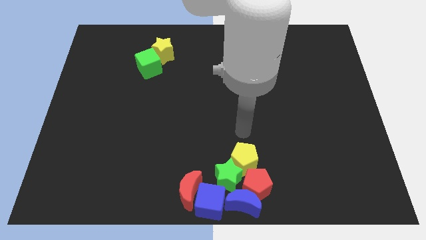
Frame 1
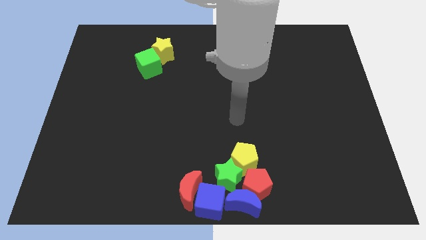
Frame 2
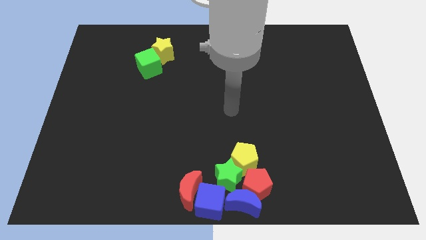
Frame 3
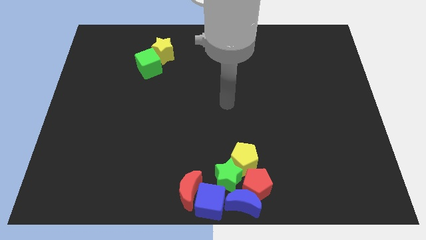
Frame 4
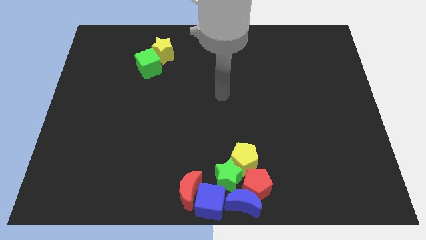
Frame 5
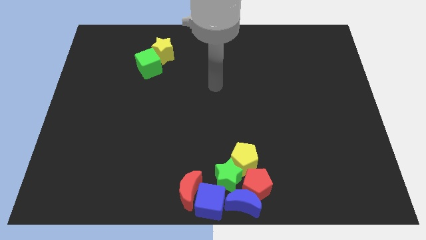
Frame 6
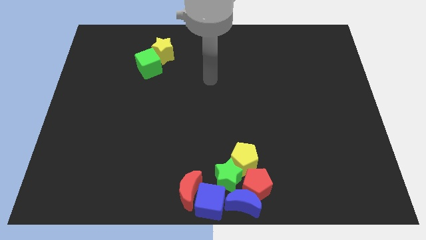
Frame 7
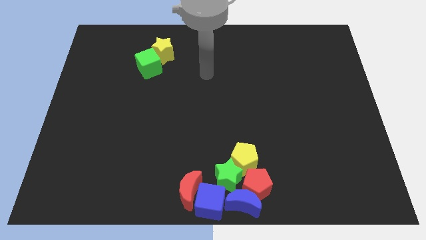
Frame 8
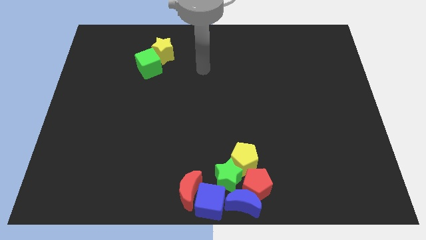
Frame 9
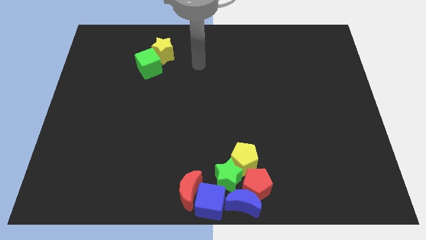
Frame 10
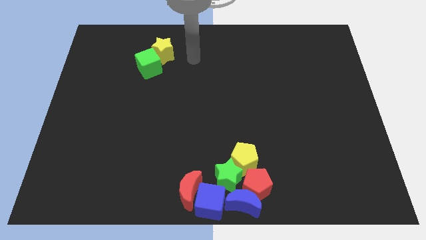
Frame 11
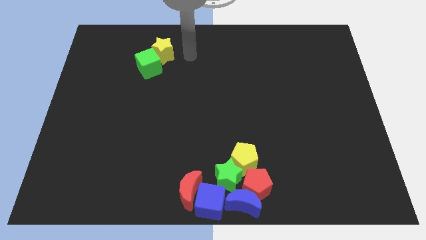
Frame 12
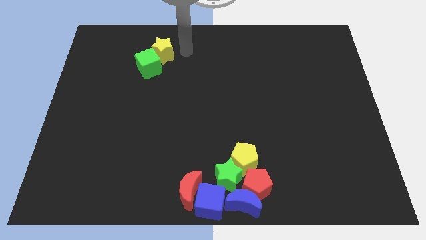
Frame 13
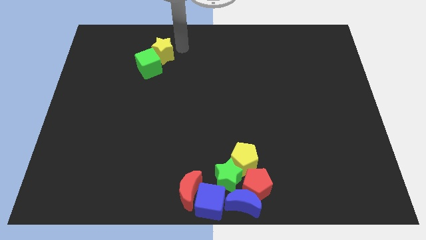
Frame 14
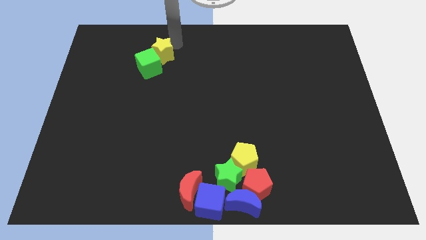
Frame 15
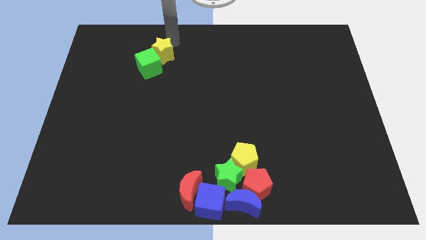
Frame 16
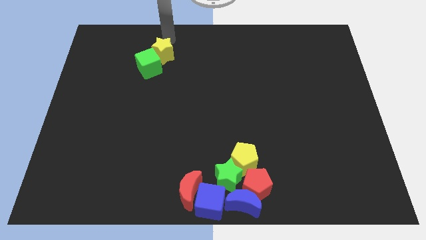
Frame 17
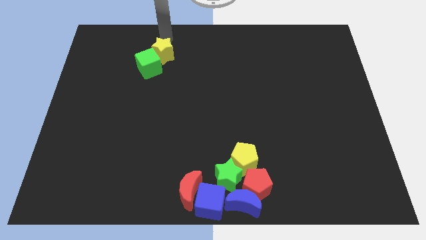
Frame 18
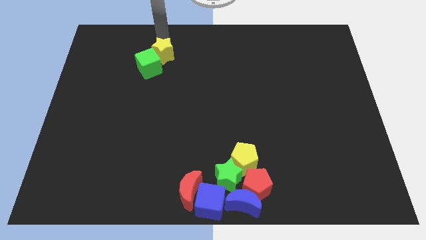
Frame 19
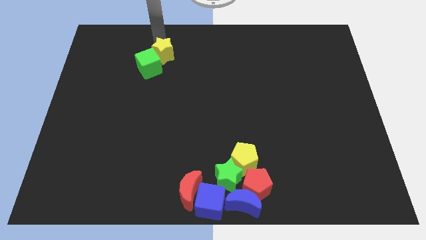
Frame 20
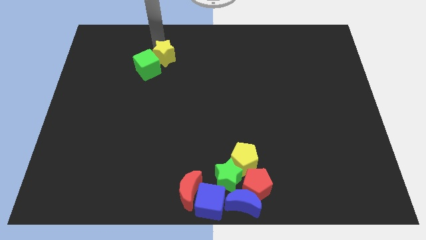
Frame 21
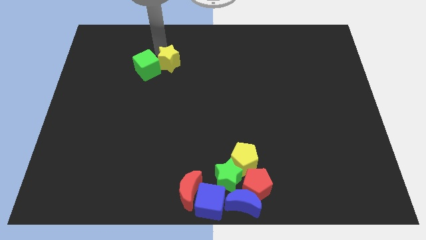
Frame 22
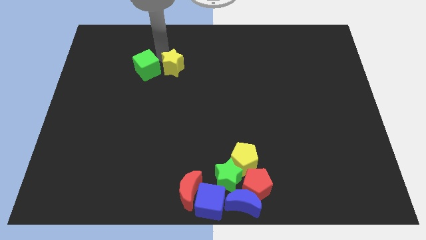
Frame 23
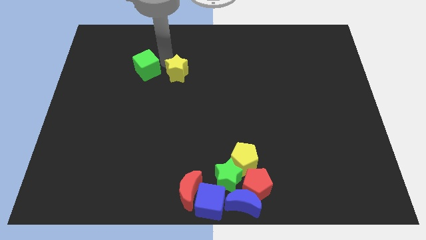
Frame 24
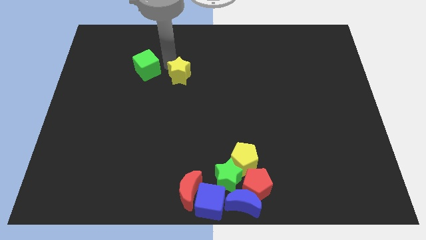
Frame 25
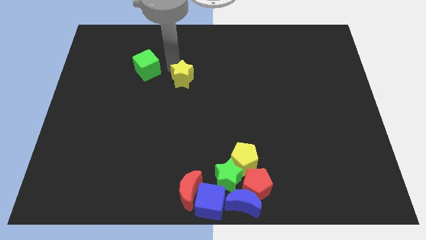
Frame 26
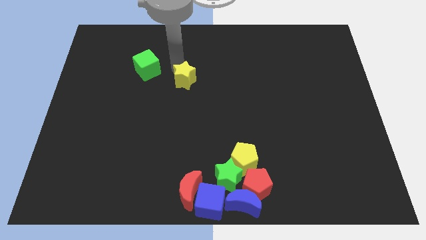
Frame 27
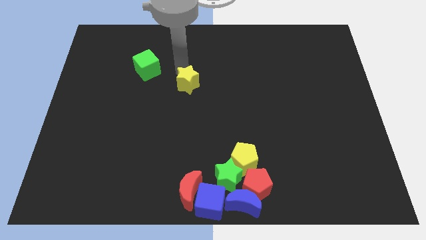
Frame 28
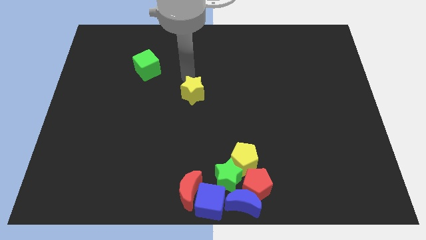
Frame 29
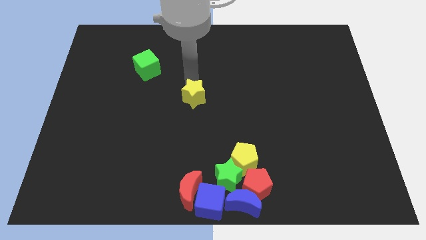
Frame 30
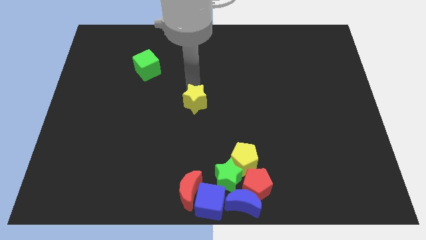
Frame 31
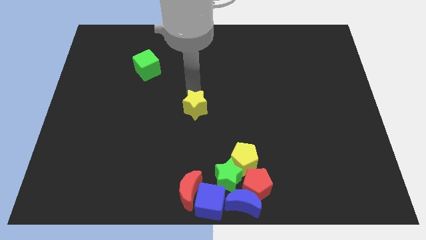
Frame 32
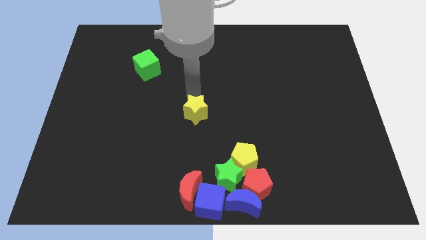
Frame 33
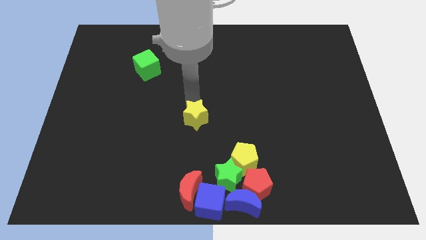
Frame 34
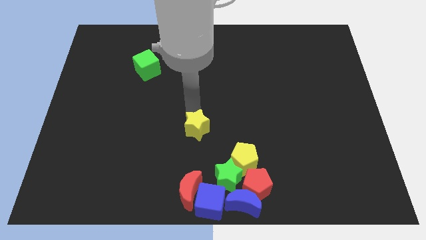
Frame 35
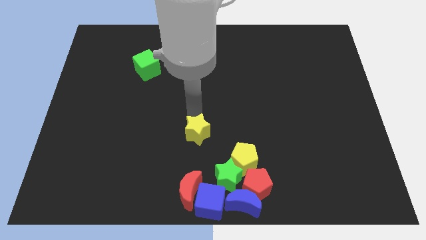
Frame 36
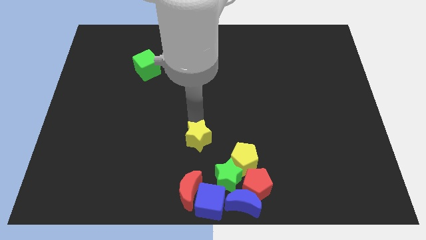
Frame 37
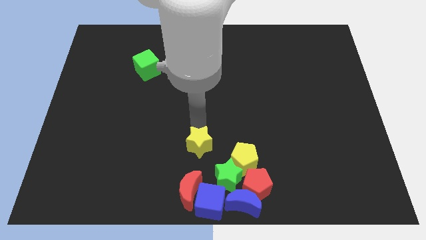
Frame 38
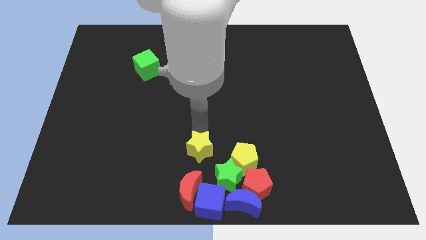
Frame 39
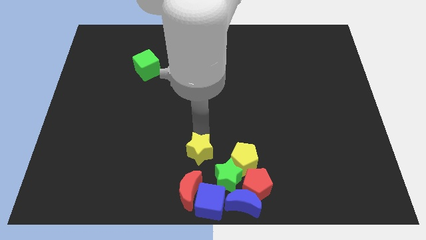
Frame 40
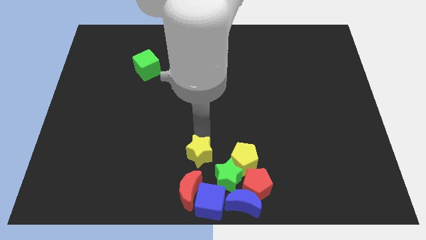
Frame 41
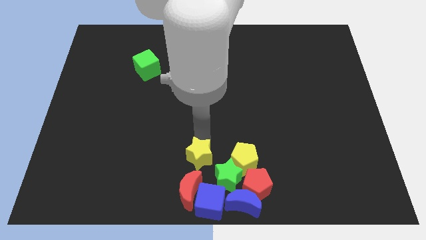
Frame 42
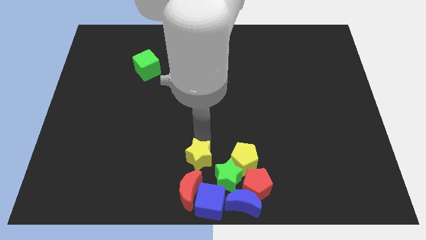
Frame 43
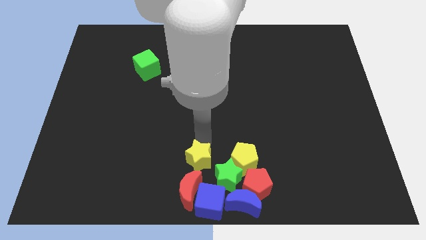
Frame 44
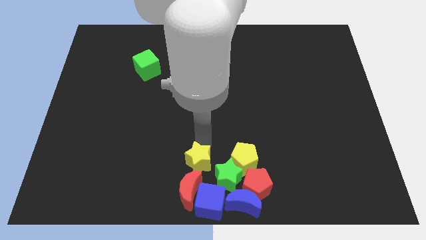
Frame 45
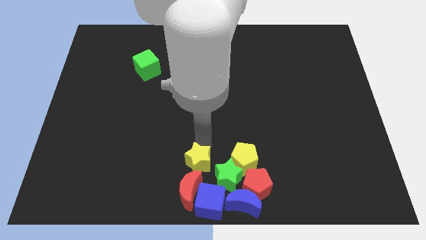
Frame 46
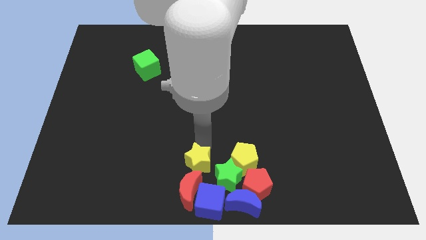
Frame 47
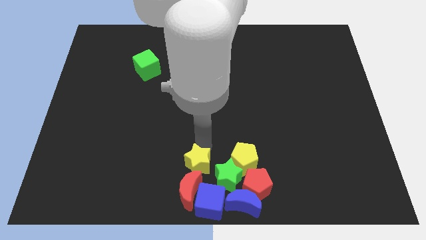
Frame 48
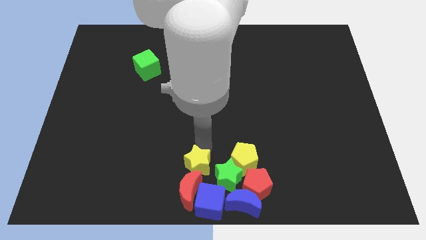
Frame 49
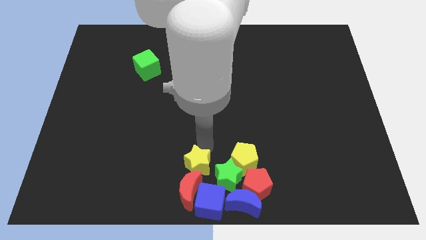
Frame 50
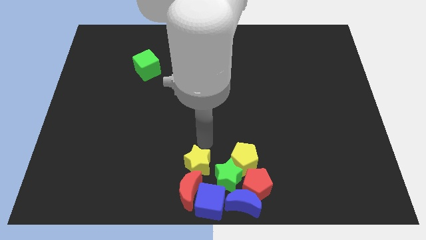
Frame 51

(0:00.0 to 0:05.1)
push the yellow star on top of the red crescent

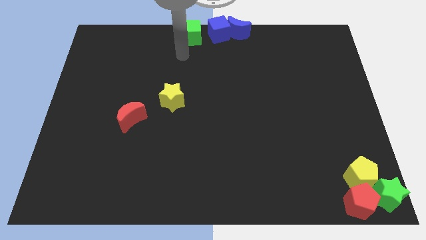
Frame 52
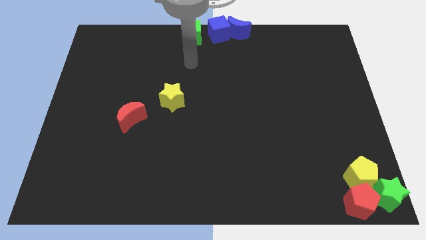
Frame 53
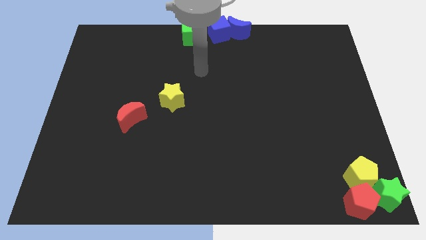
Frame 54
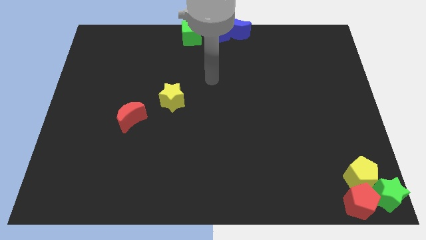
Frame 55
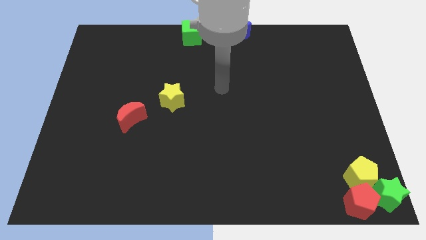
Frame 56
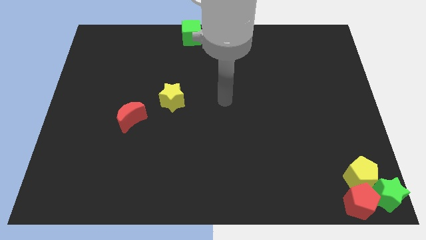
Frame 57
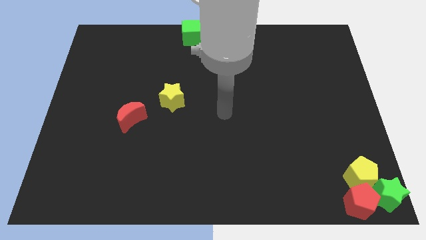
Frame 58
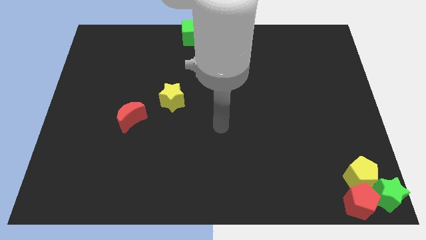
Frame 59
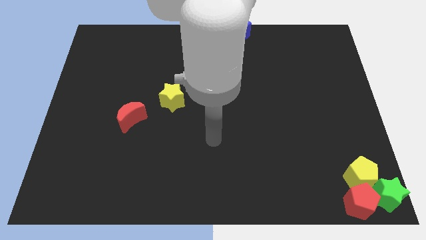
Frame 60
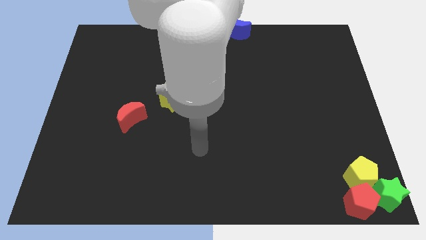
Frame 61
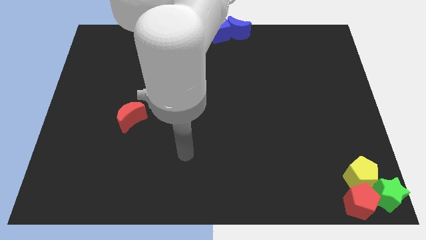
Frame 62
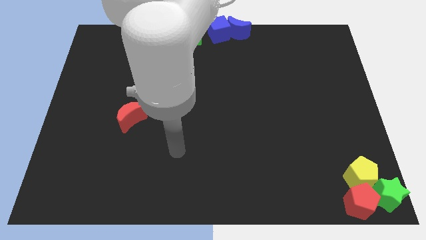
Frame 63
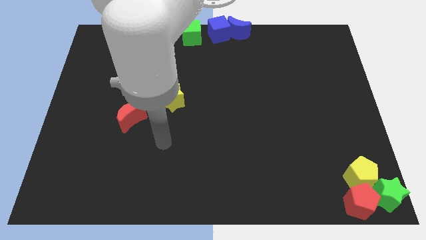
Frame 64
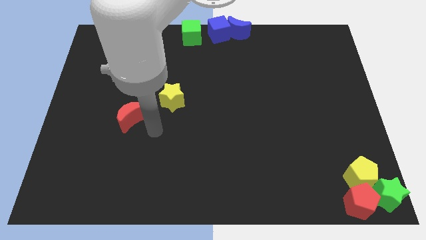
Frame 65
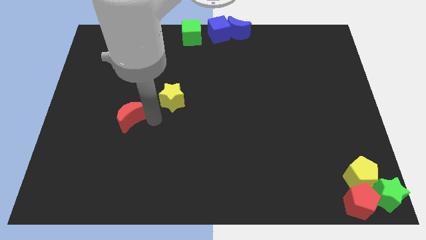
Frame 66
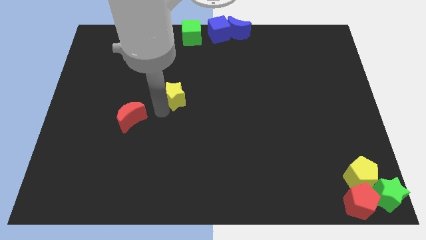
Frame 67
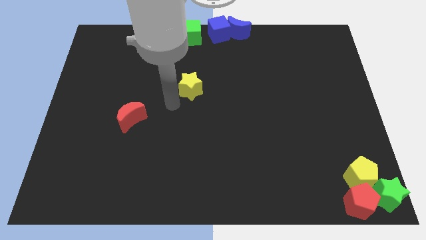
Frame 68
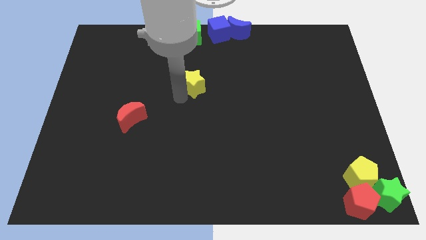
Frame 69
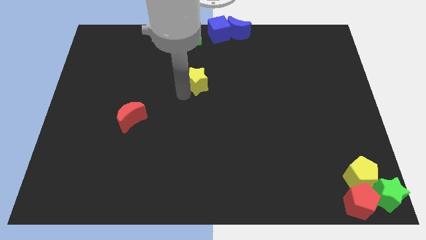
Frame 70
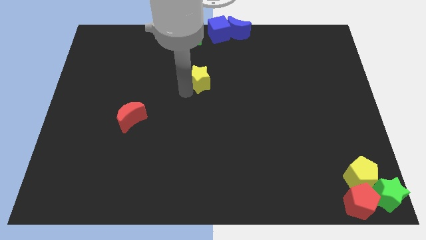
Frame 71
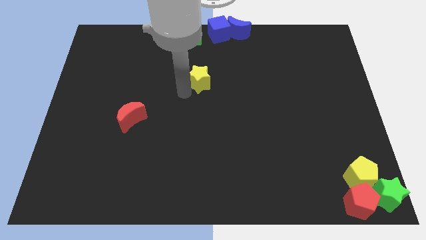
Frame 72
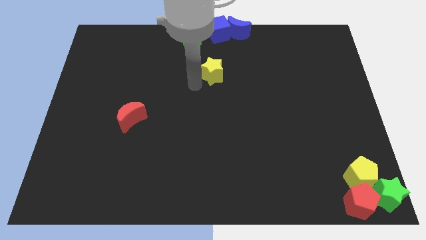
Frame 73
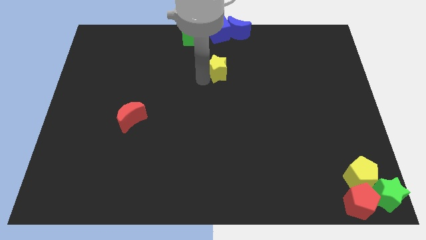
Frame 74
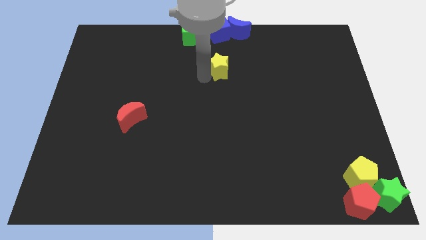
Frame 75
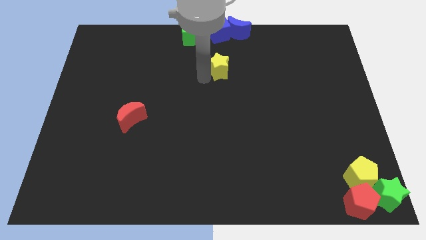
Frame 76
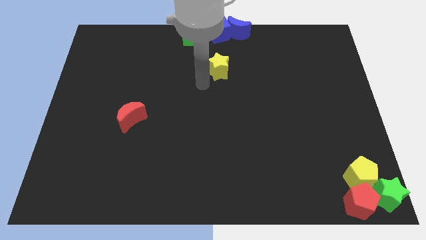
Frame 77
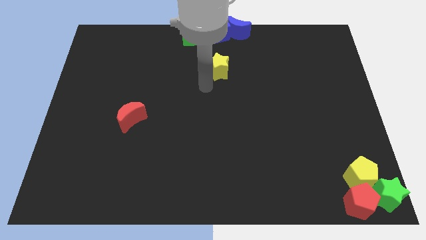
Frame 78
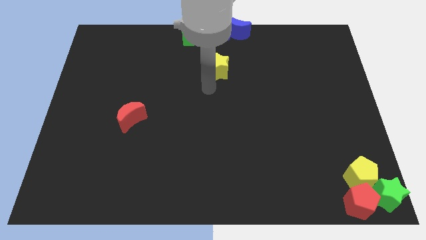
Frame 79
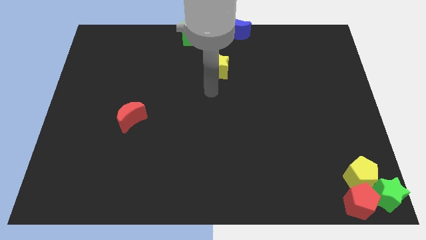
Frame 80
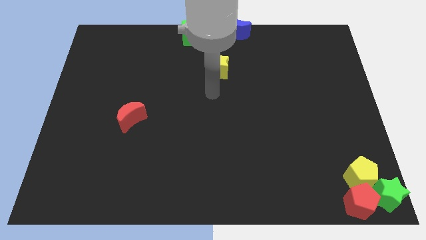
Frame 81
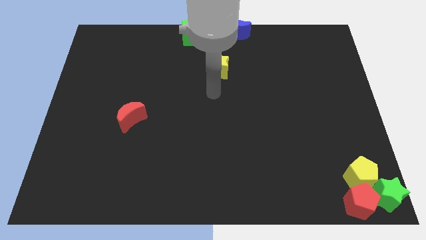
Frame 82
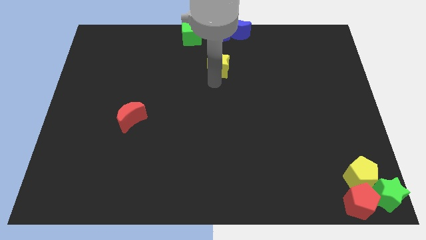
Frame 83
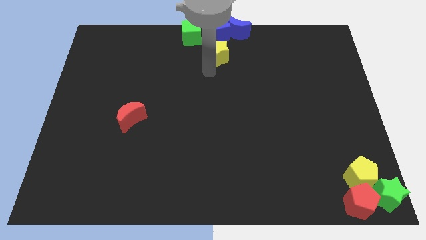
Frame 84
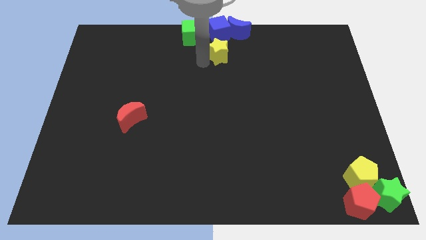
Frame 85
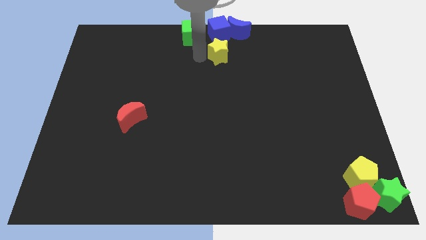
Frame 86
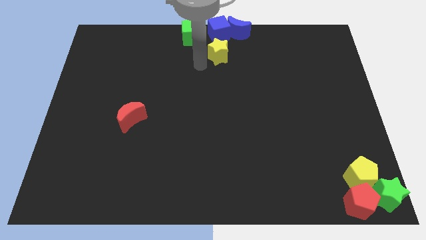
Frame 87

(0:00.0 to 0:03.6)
push the yellow star towards the top center of the board

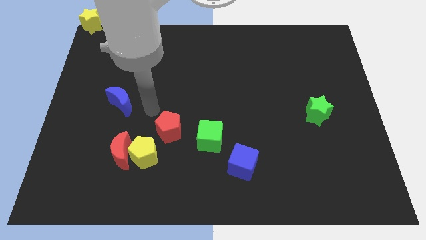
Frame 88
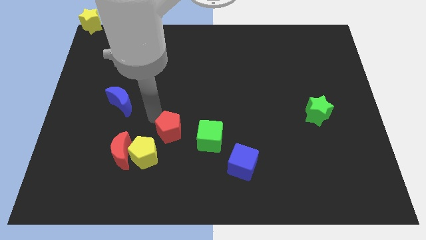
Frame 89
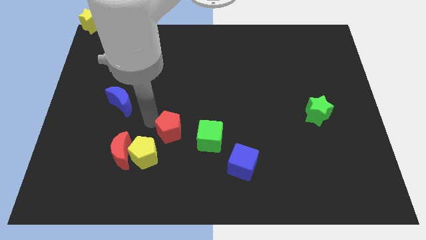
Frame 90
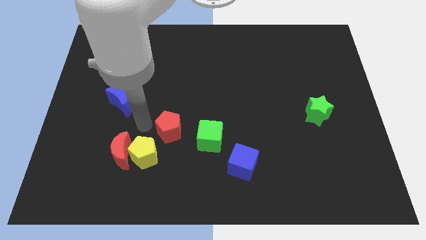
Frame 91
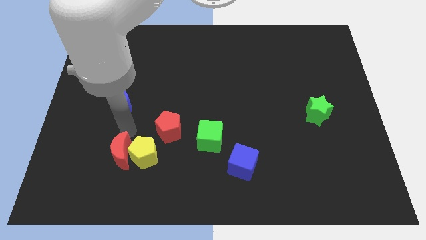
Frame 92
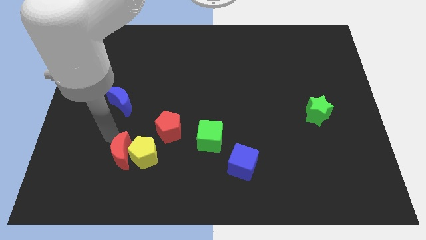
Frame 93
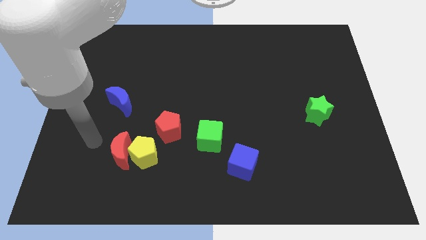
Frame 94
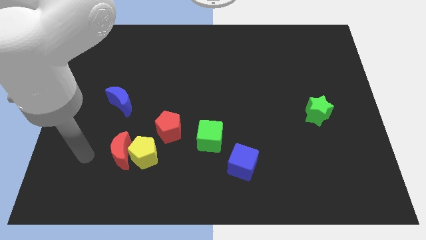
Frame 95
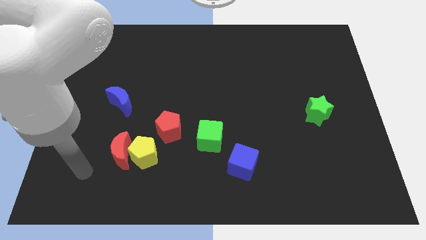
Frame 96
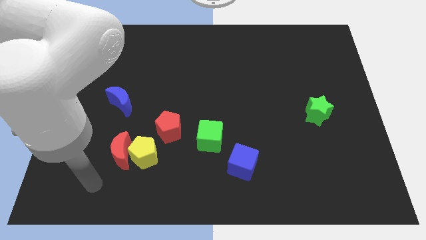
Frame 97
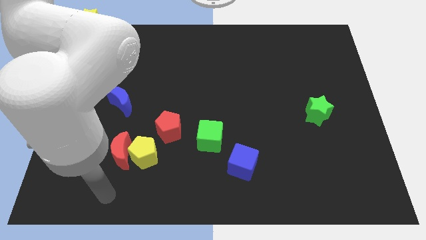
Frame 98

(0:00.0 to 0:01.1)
move your hand away from blue moon
